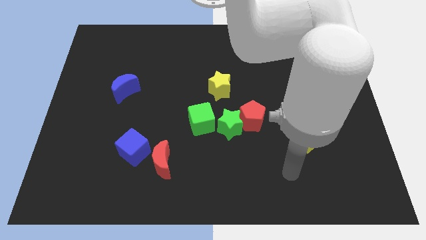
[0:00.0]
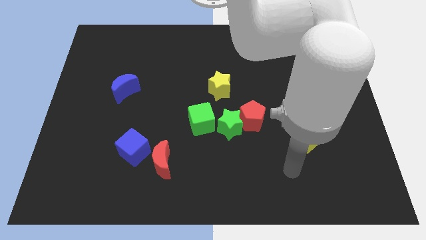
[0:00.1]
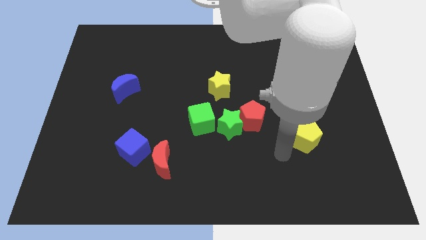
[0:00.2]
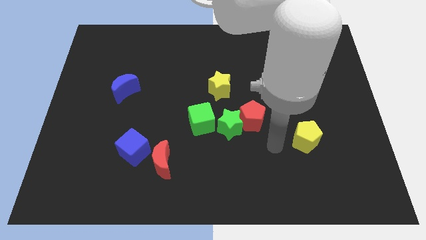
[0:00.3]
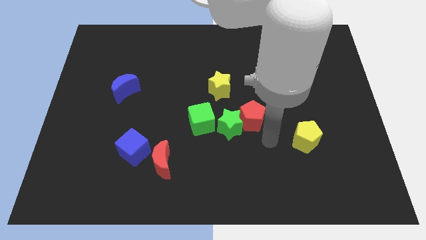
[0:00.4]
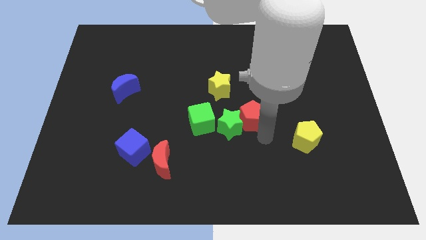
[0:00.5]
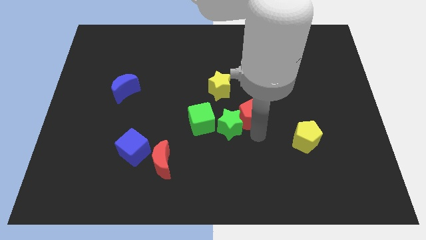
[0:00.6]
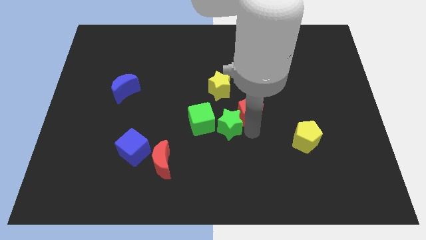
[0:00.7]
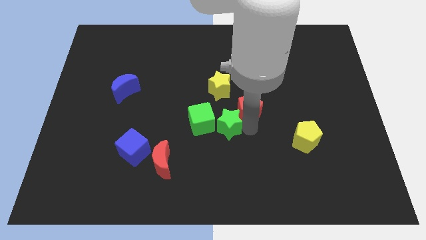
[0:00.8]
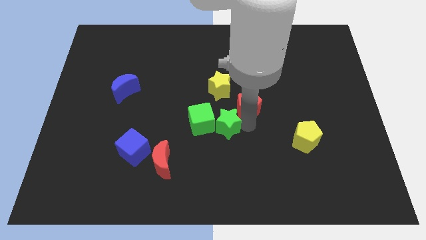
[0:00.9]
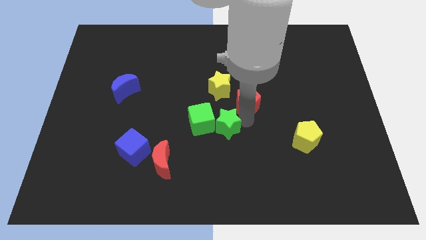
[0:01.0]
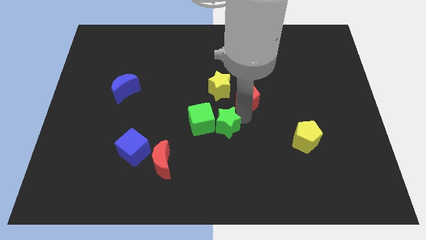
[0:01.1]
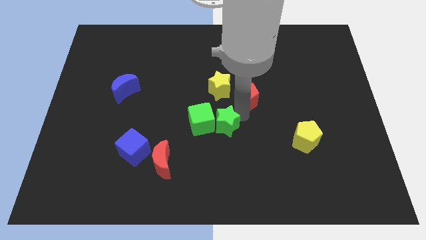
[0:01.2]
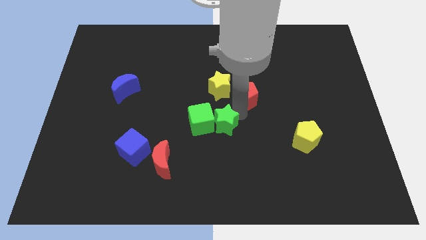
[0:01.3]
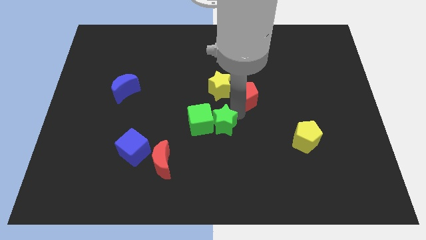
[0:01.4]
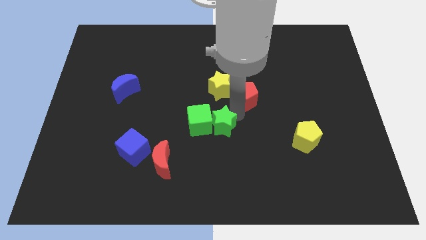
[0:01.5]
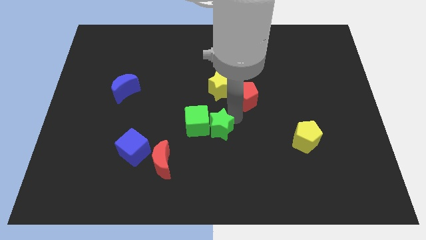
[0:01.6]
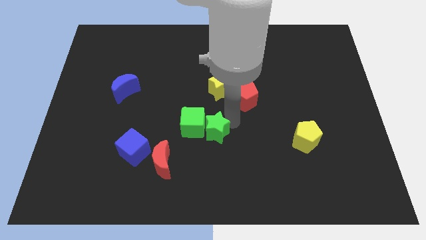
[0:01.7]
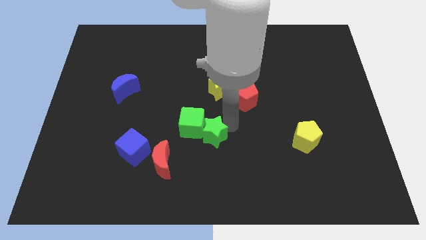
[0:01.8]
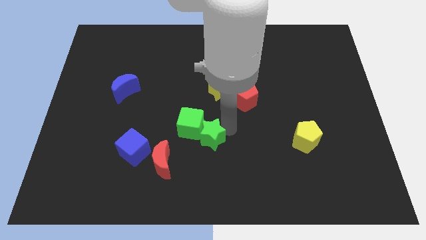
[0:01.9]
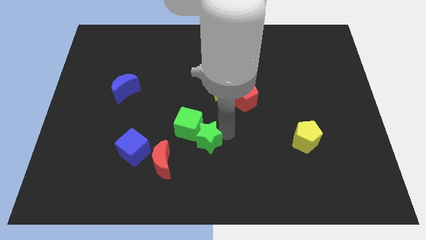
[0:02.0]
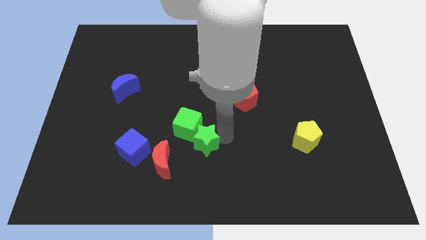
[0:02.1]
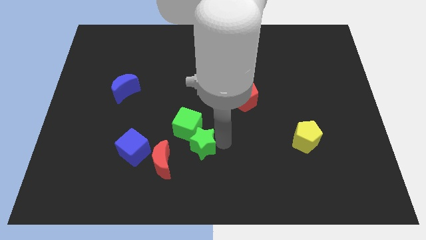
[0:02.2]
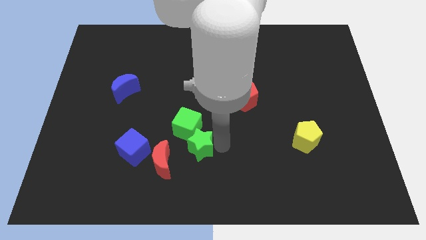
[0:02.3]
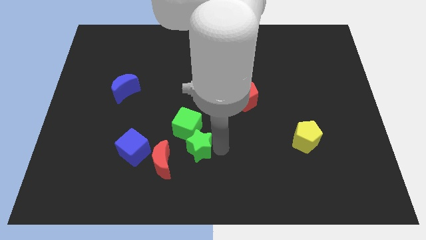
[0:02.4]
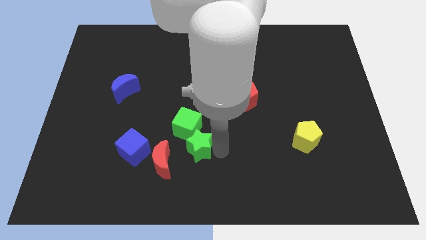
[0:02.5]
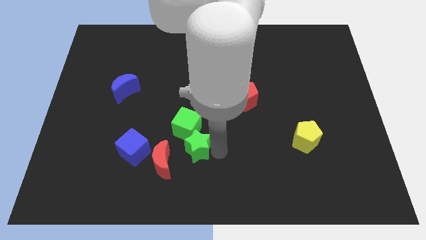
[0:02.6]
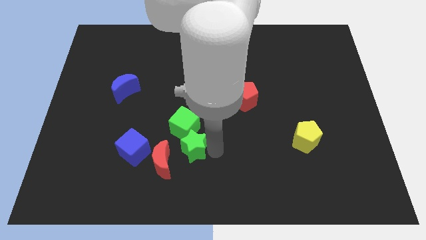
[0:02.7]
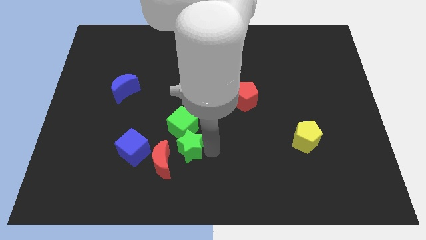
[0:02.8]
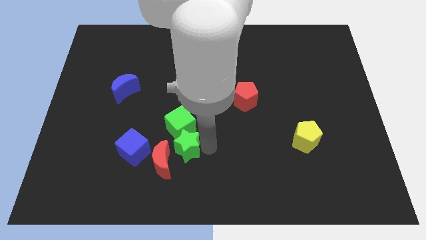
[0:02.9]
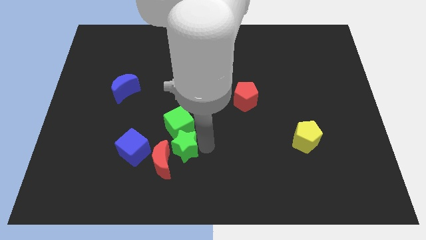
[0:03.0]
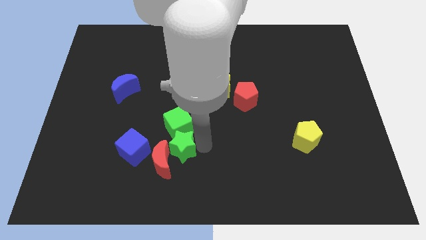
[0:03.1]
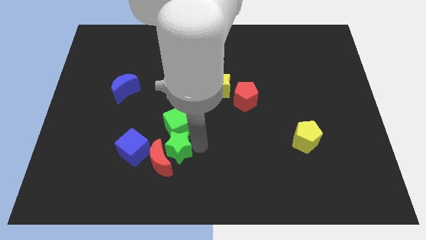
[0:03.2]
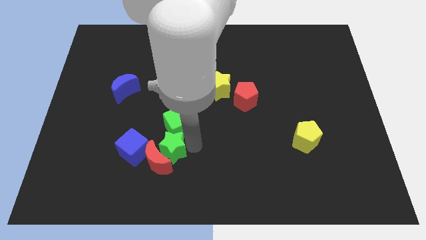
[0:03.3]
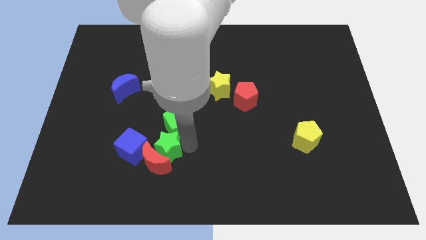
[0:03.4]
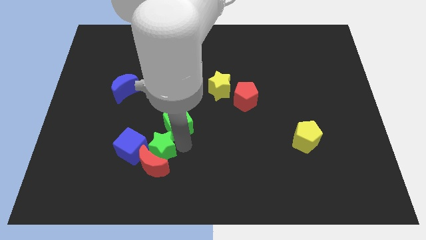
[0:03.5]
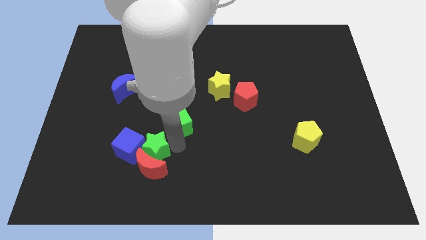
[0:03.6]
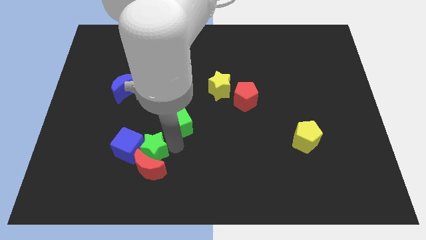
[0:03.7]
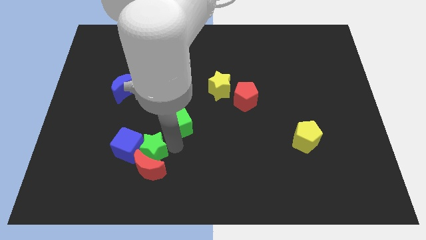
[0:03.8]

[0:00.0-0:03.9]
slide the green star close to the blue cube

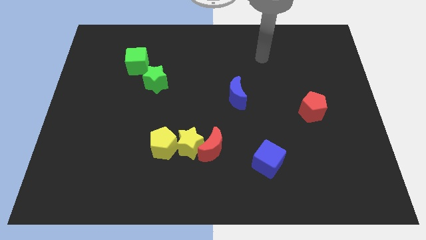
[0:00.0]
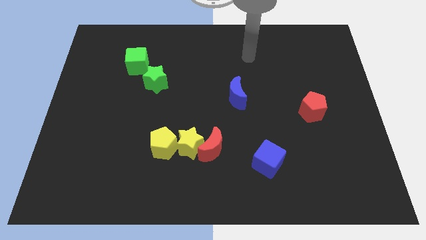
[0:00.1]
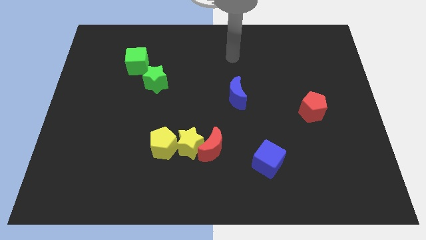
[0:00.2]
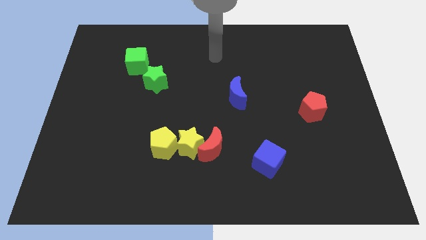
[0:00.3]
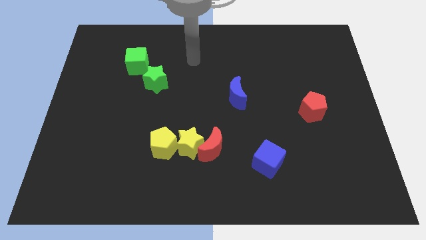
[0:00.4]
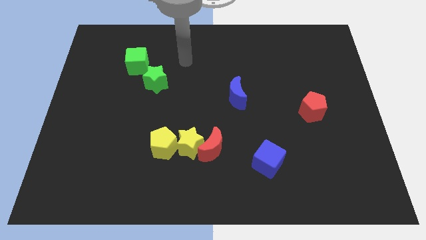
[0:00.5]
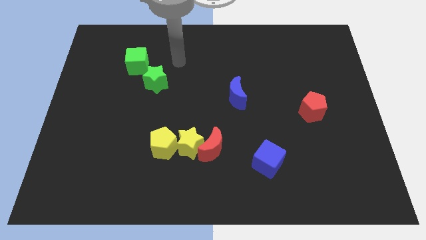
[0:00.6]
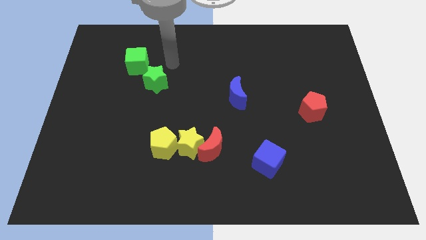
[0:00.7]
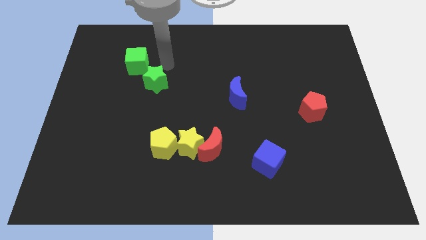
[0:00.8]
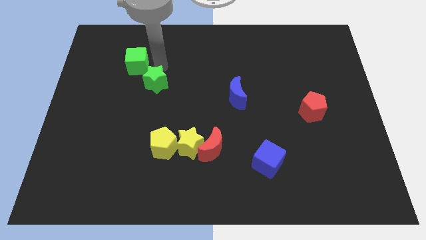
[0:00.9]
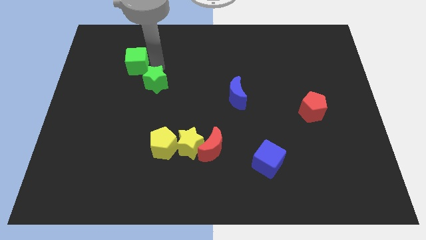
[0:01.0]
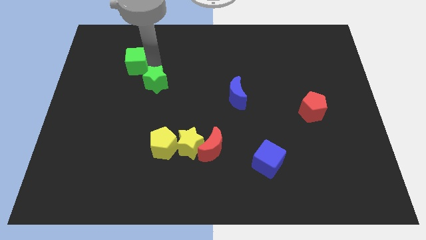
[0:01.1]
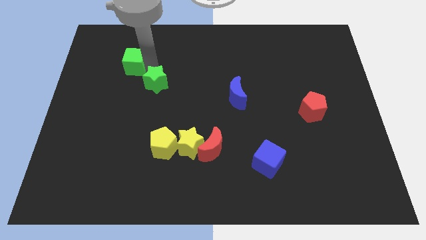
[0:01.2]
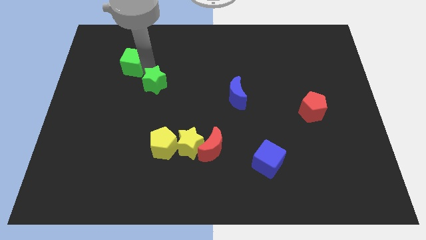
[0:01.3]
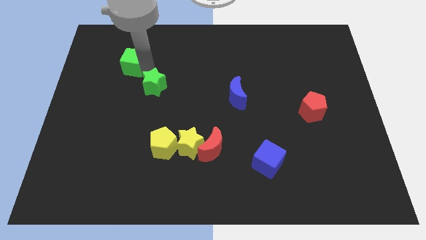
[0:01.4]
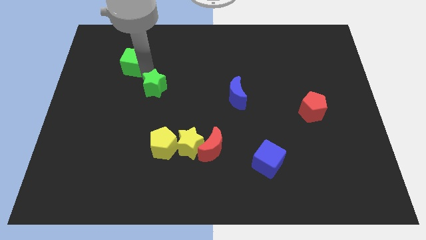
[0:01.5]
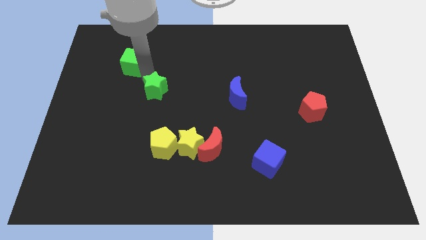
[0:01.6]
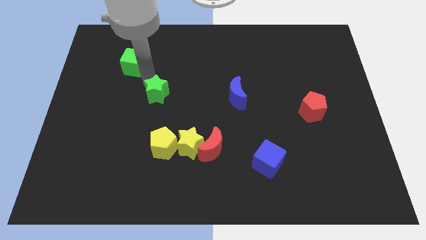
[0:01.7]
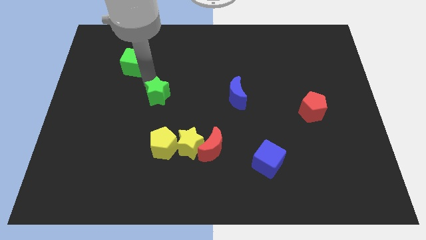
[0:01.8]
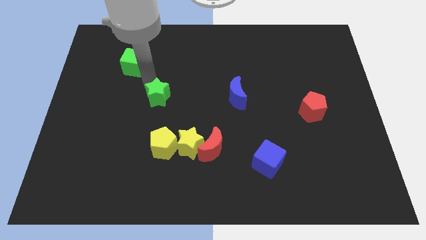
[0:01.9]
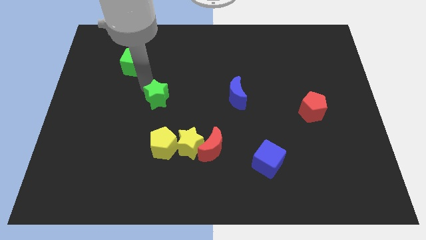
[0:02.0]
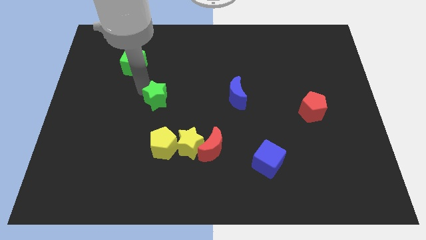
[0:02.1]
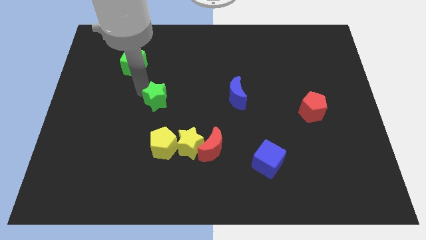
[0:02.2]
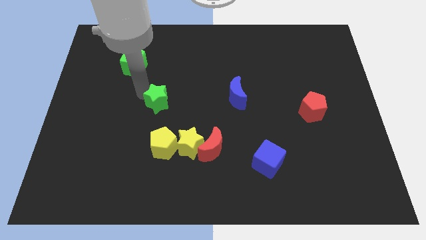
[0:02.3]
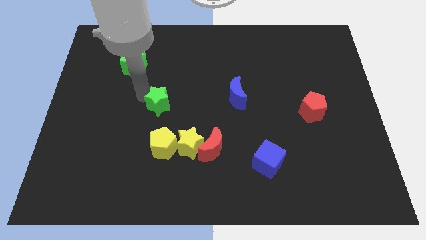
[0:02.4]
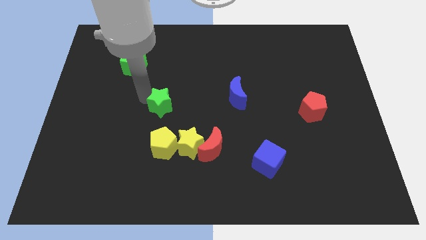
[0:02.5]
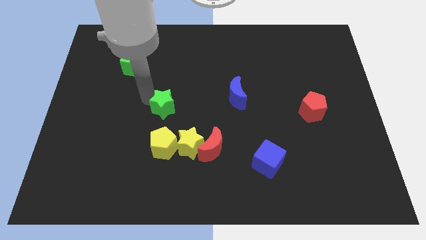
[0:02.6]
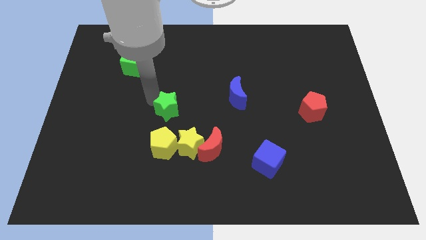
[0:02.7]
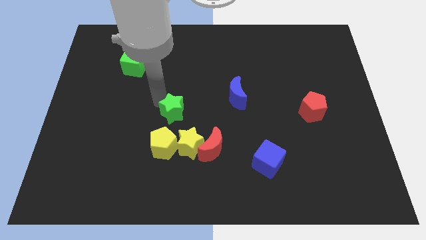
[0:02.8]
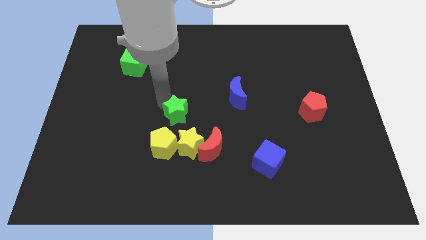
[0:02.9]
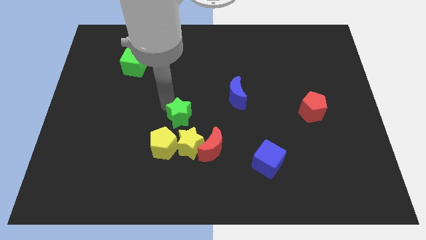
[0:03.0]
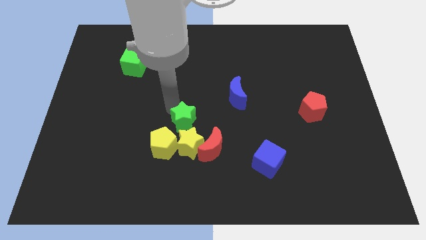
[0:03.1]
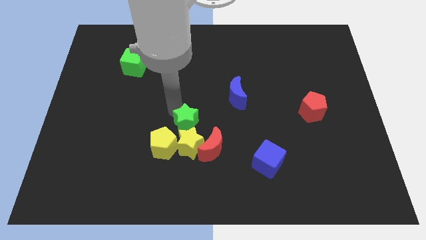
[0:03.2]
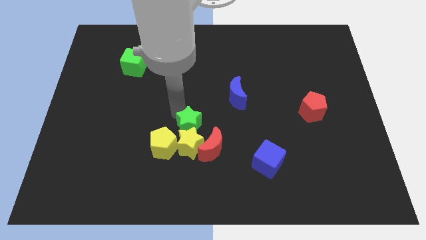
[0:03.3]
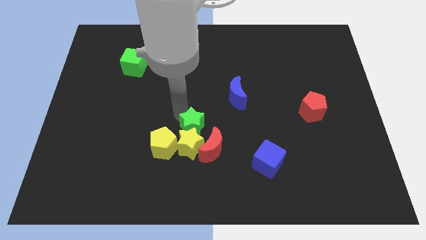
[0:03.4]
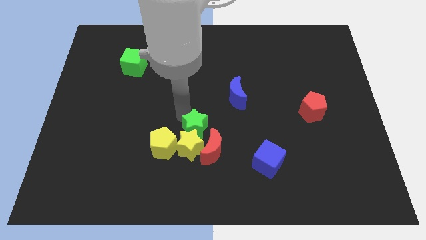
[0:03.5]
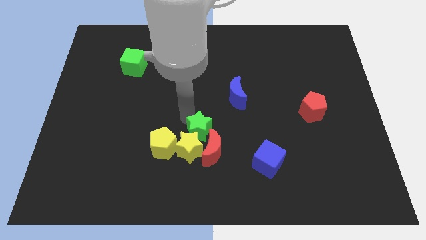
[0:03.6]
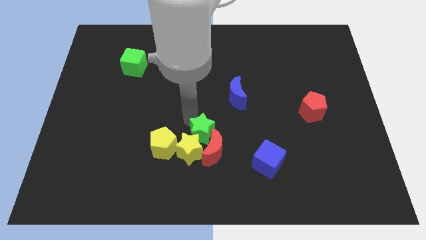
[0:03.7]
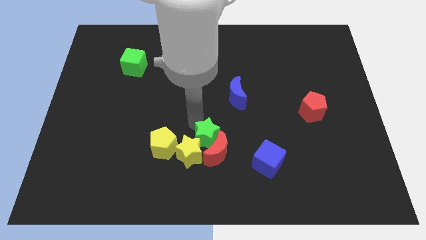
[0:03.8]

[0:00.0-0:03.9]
slide the green star towards the red moon
